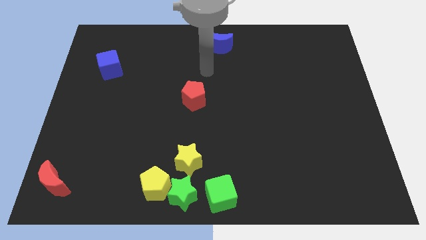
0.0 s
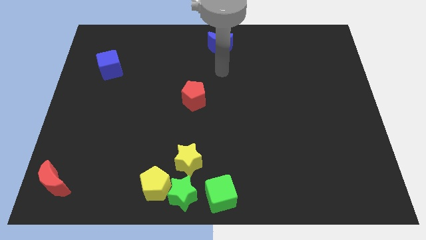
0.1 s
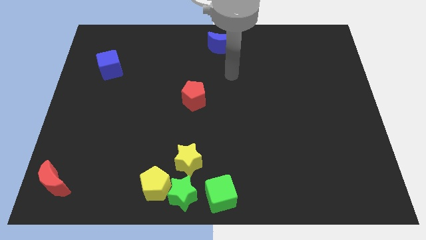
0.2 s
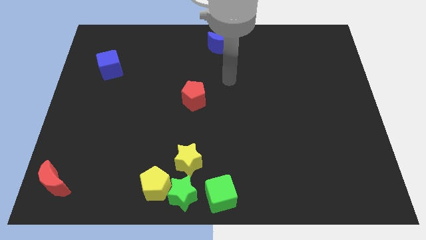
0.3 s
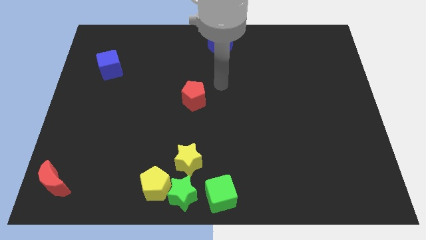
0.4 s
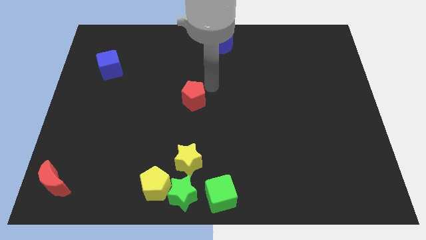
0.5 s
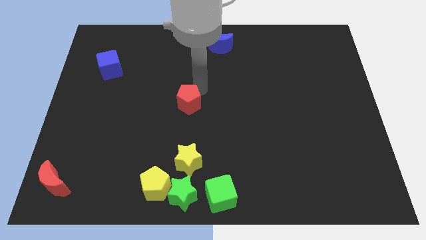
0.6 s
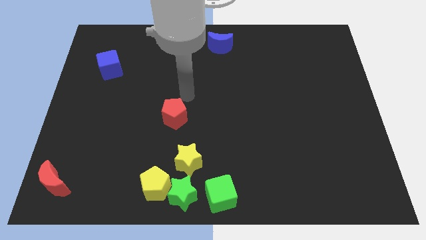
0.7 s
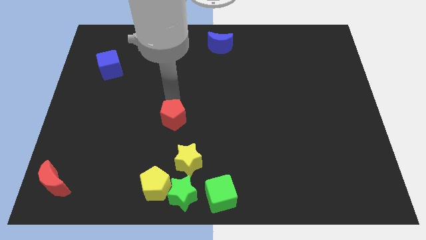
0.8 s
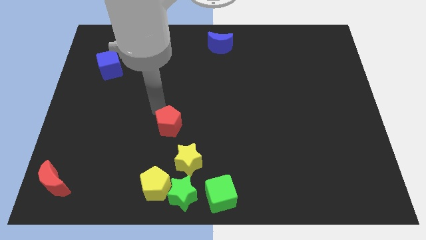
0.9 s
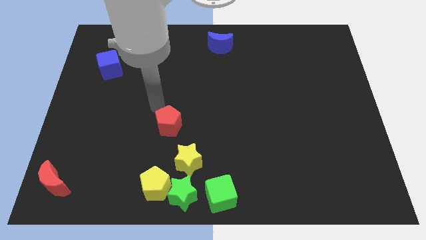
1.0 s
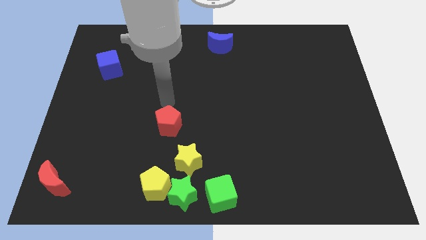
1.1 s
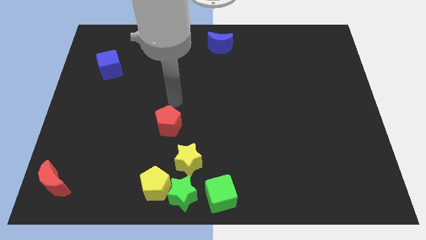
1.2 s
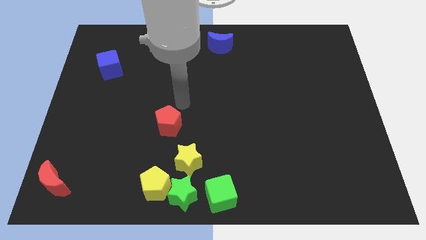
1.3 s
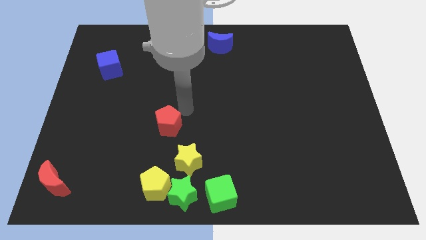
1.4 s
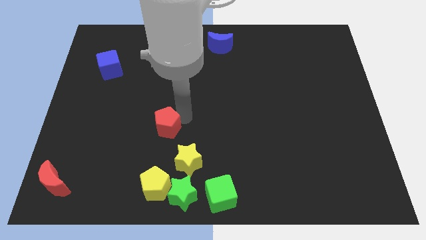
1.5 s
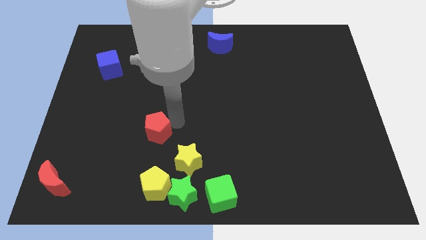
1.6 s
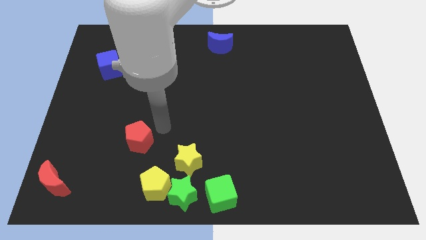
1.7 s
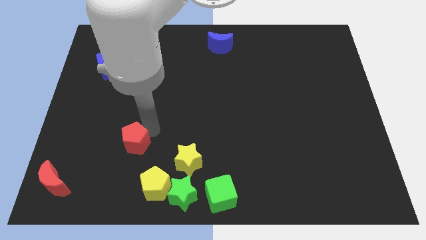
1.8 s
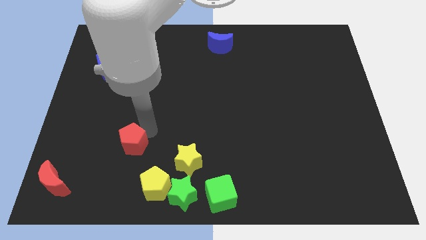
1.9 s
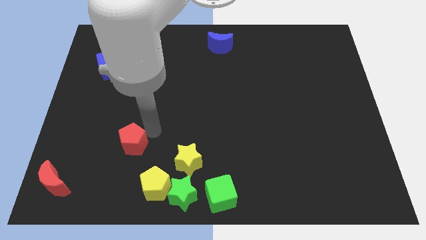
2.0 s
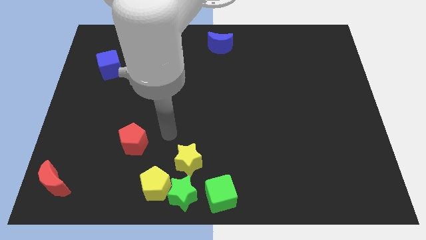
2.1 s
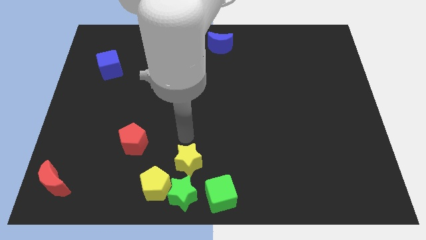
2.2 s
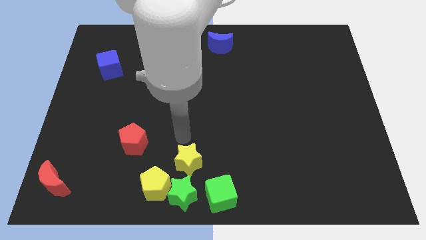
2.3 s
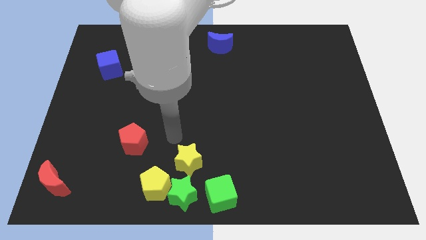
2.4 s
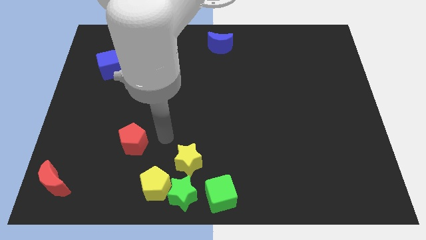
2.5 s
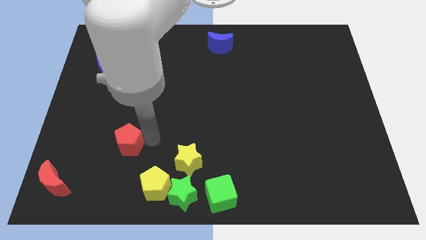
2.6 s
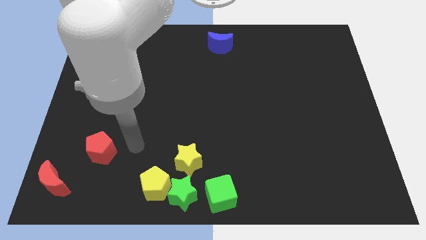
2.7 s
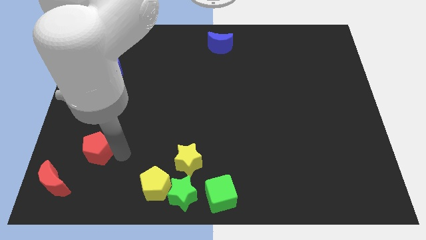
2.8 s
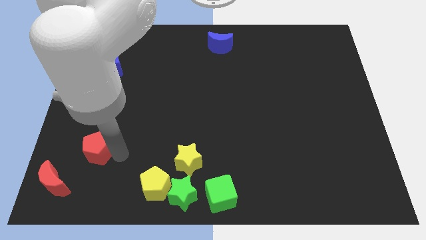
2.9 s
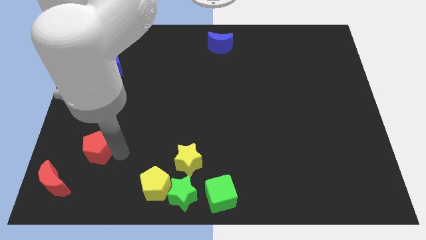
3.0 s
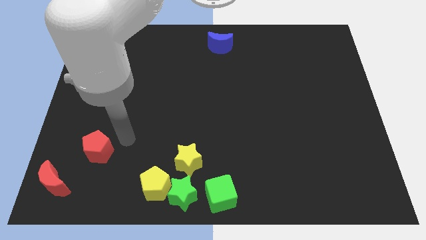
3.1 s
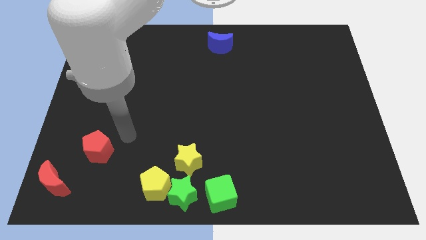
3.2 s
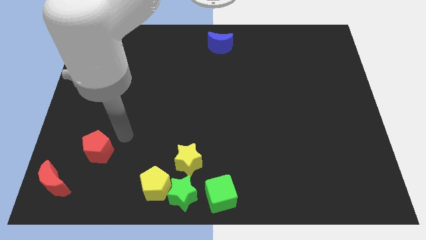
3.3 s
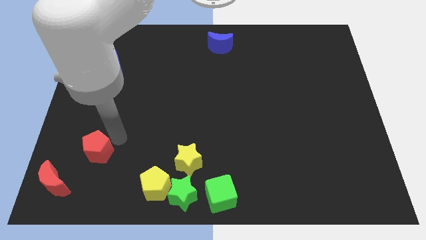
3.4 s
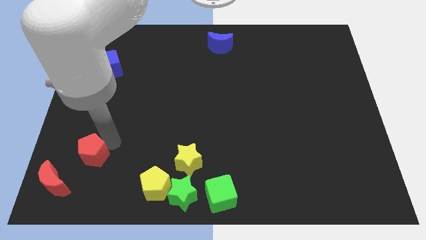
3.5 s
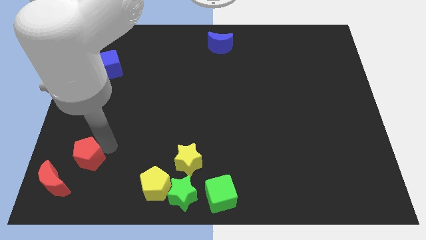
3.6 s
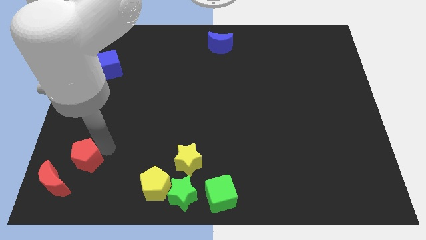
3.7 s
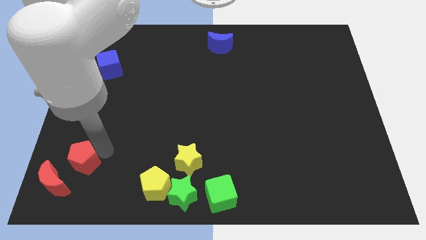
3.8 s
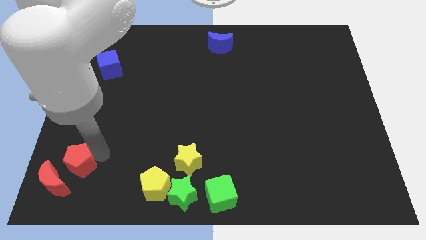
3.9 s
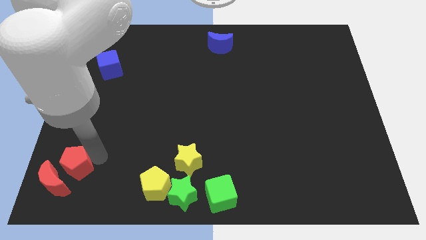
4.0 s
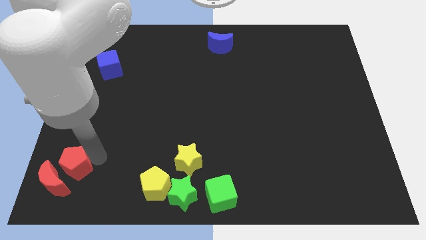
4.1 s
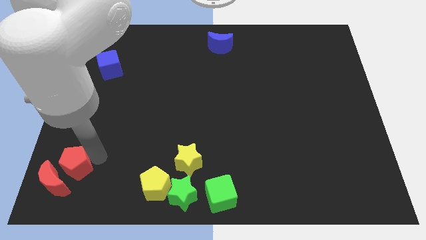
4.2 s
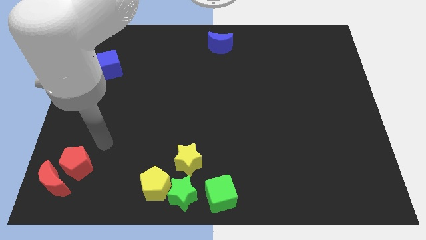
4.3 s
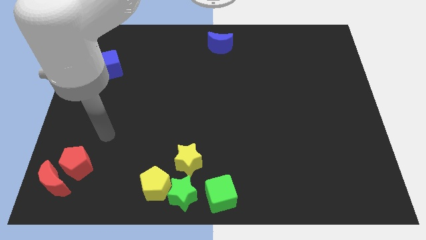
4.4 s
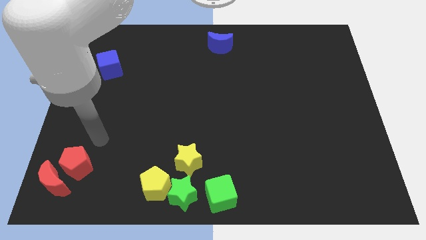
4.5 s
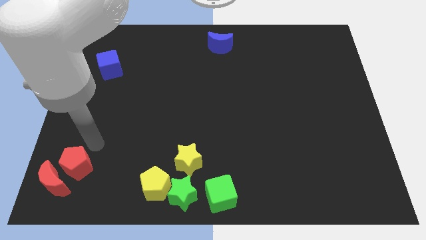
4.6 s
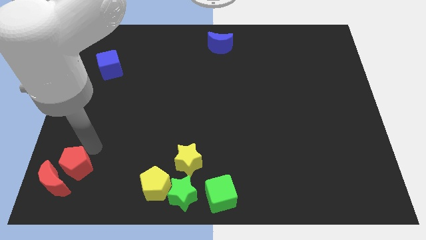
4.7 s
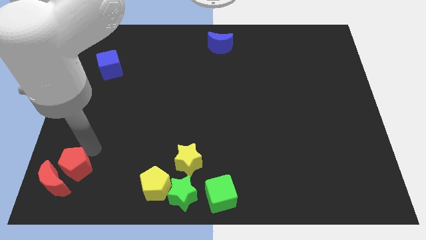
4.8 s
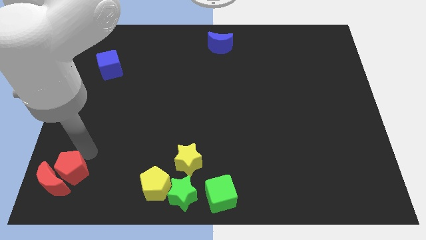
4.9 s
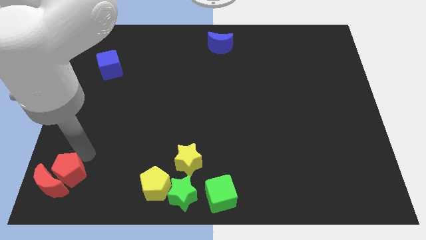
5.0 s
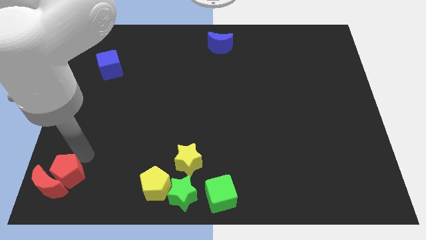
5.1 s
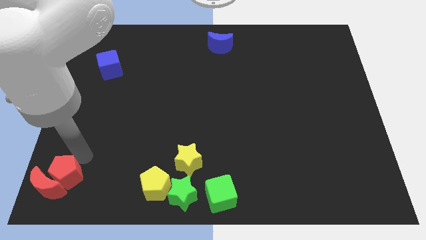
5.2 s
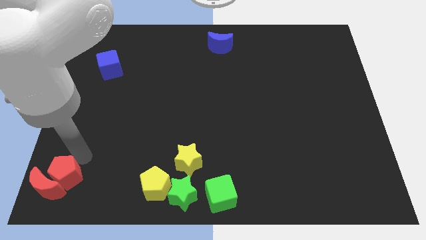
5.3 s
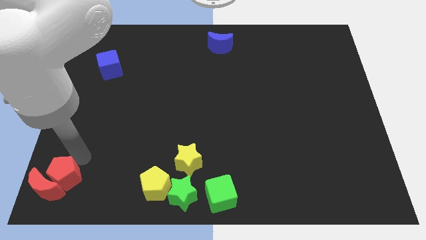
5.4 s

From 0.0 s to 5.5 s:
drag the red pentagon into the top right side of the red crescent

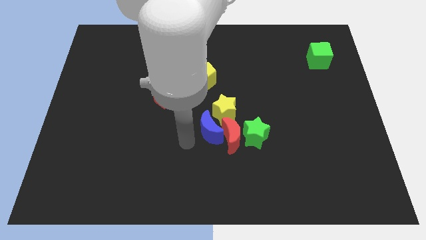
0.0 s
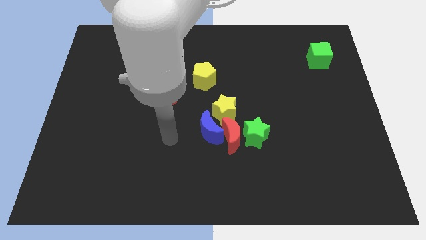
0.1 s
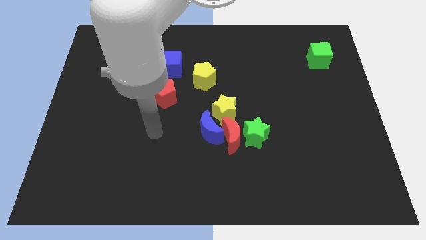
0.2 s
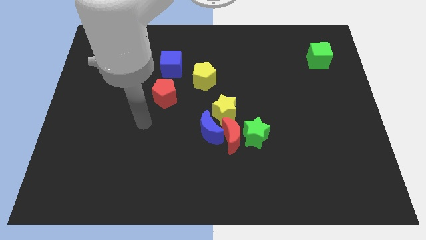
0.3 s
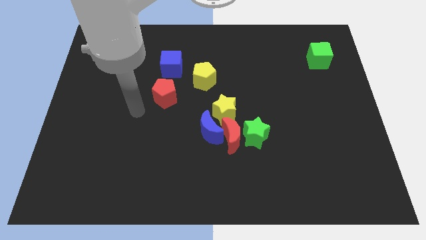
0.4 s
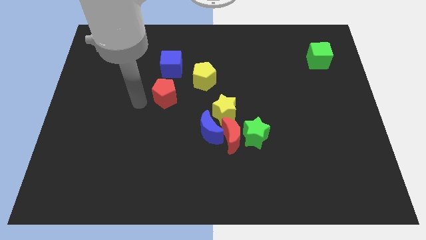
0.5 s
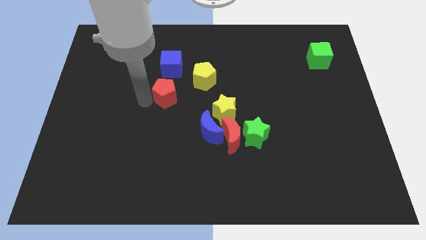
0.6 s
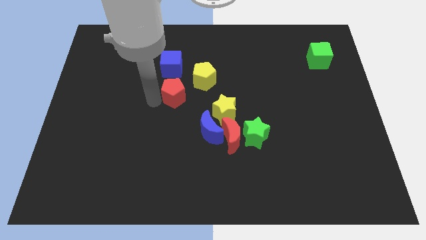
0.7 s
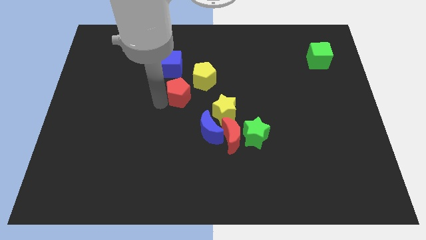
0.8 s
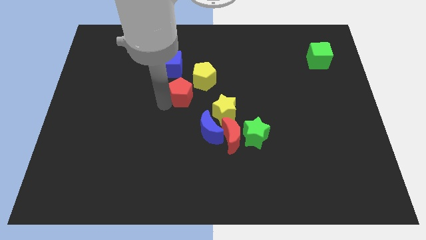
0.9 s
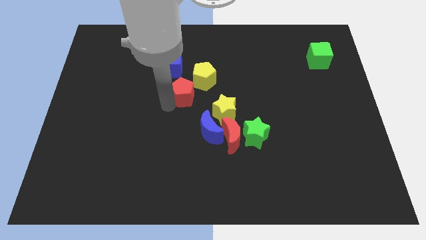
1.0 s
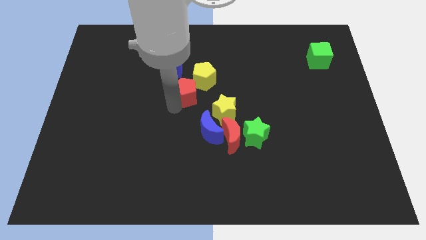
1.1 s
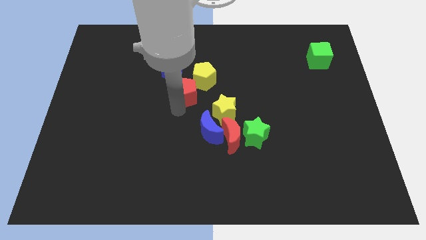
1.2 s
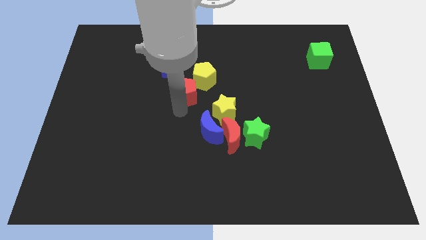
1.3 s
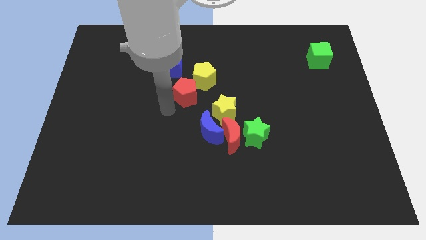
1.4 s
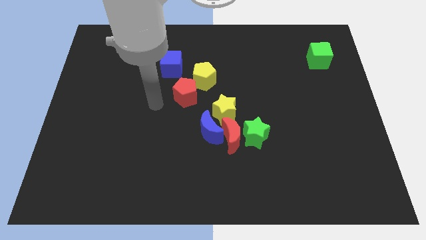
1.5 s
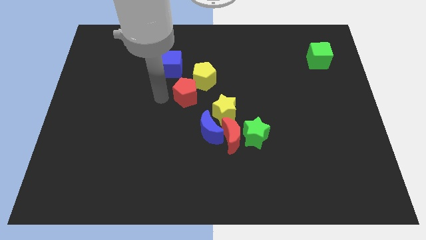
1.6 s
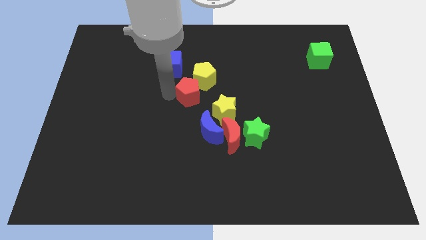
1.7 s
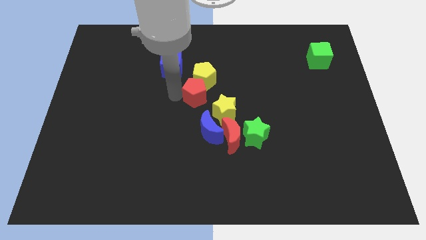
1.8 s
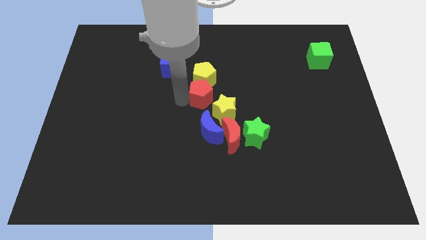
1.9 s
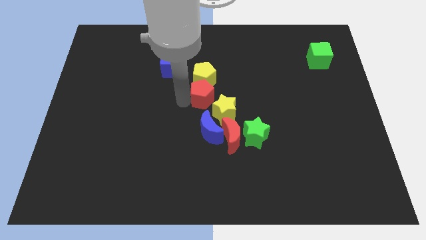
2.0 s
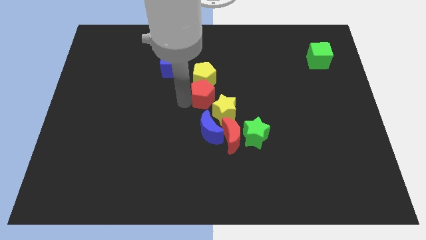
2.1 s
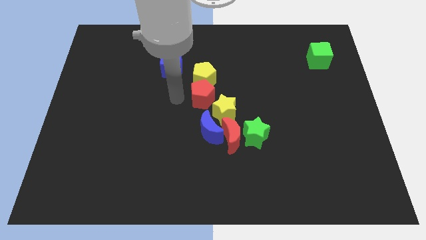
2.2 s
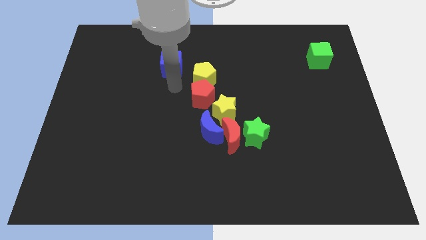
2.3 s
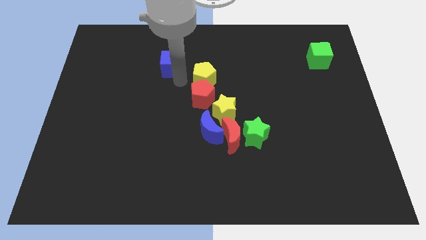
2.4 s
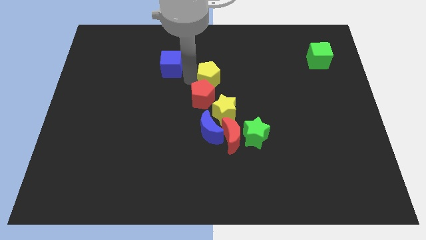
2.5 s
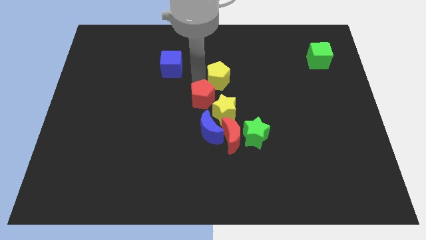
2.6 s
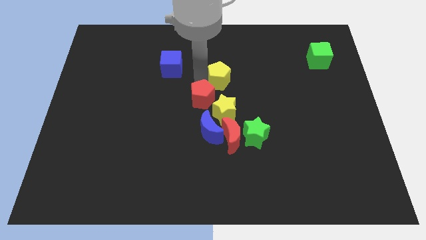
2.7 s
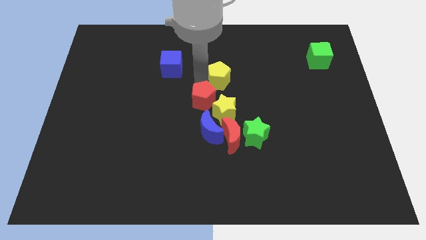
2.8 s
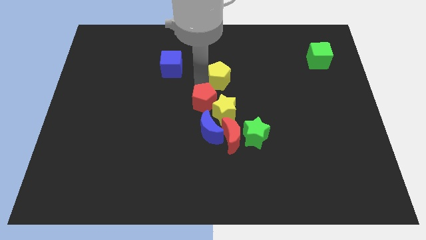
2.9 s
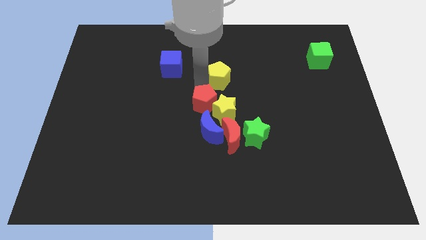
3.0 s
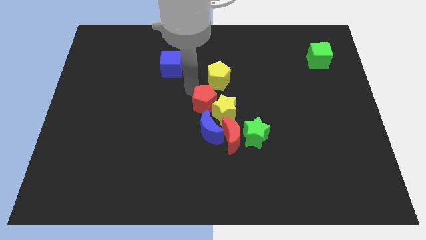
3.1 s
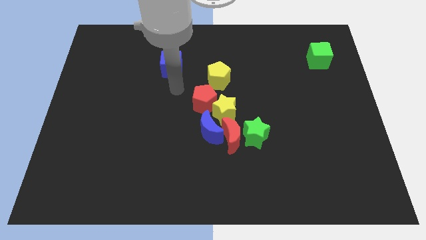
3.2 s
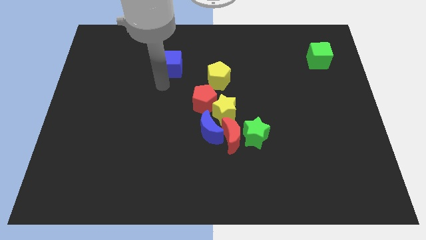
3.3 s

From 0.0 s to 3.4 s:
place the red pentagon diagonally to the left of the yellow star
